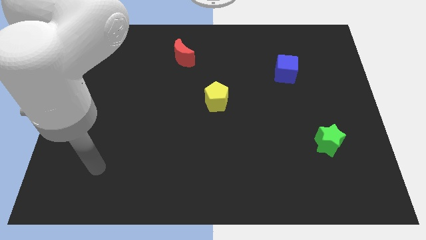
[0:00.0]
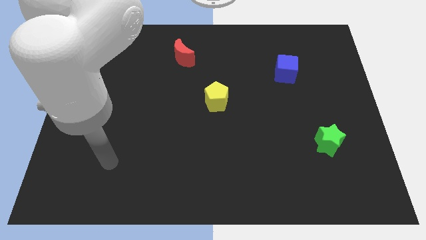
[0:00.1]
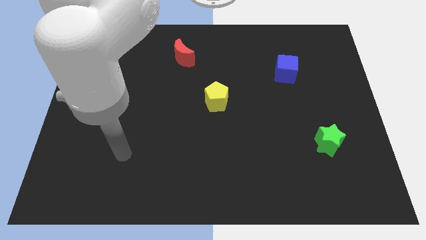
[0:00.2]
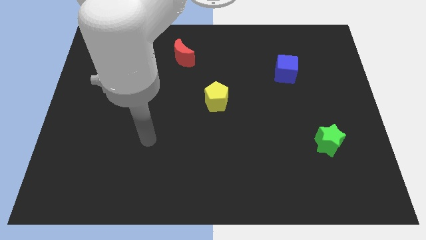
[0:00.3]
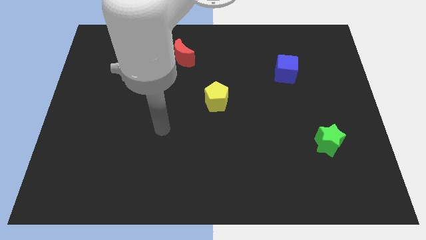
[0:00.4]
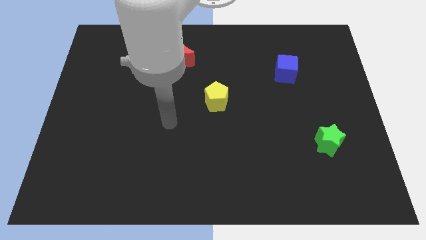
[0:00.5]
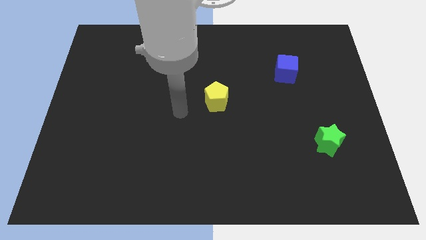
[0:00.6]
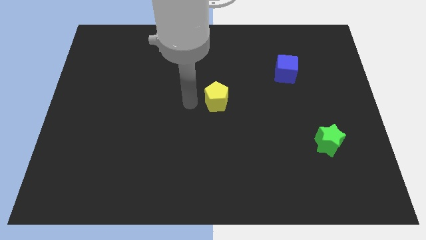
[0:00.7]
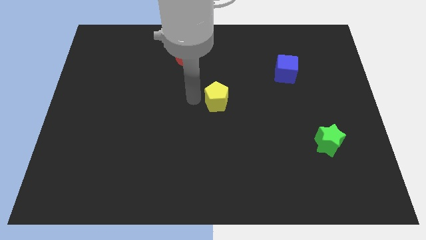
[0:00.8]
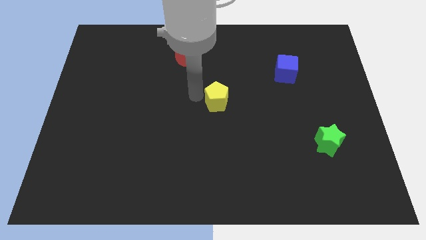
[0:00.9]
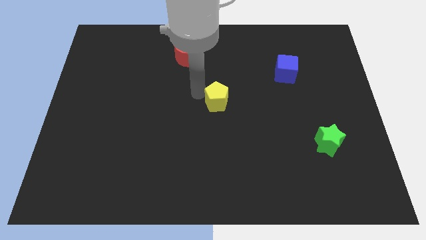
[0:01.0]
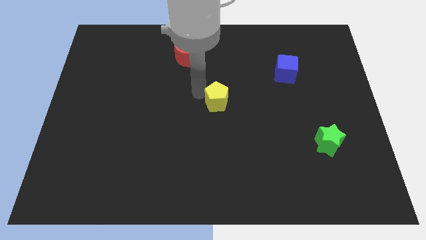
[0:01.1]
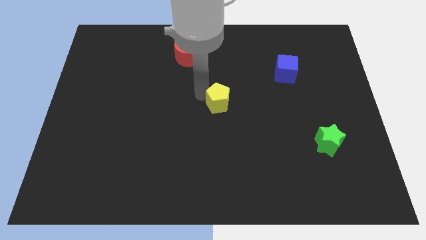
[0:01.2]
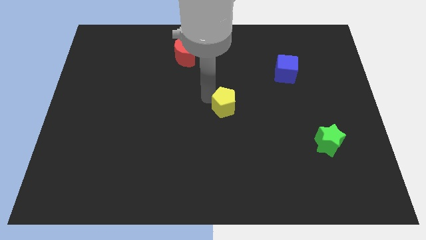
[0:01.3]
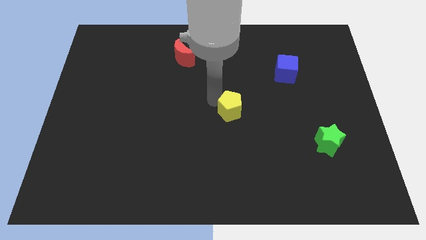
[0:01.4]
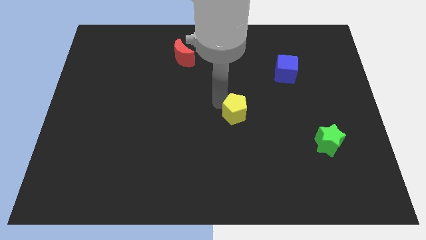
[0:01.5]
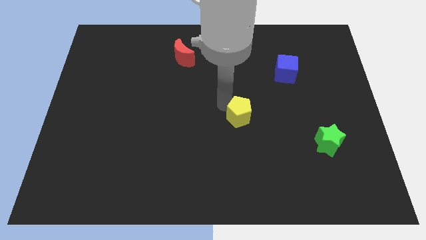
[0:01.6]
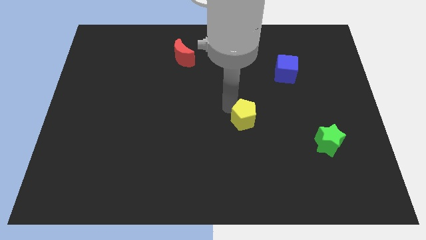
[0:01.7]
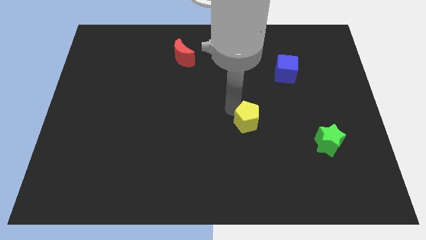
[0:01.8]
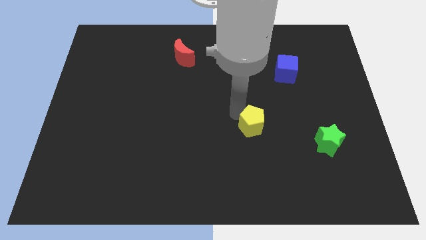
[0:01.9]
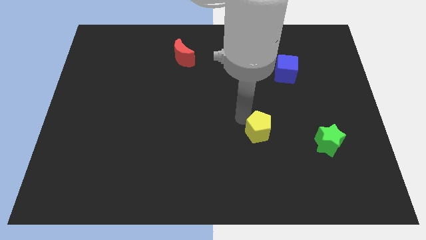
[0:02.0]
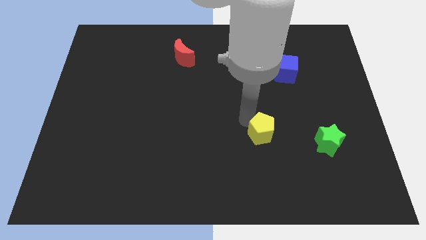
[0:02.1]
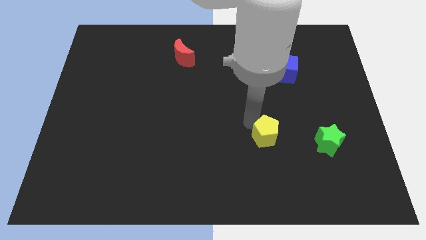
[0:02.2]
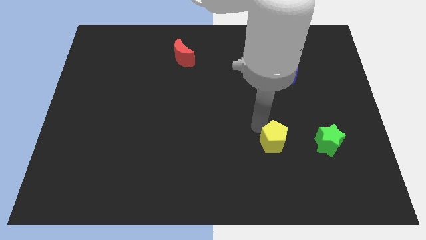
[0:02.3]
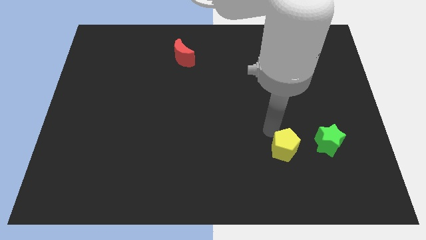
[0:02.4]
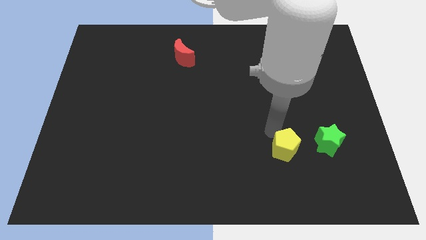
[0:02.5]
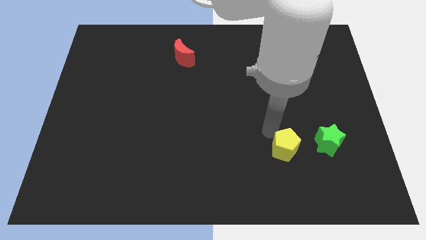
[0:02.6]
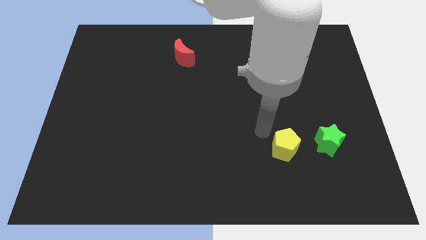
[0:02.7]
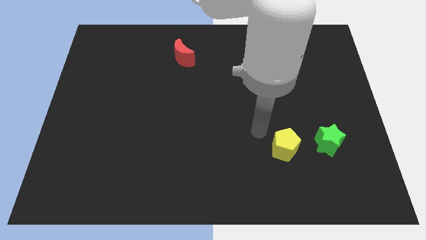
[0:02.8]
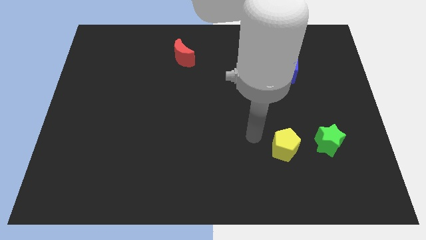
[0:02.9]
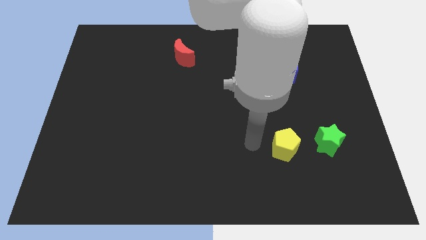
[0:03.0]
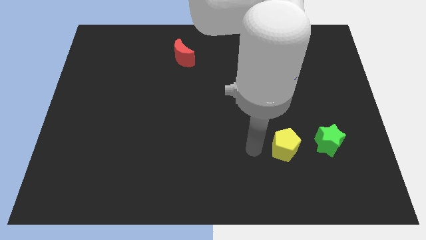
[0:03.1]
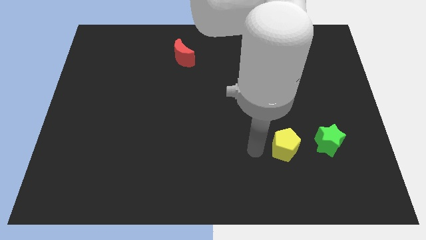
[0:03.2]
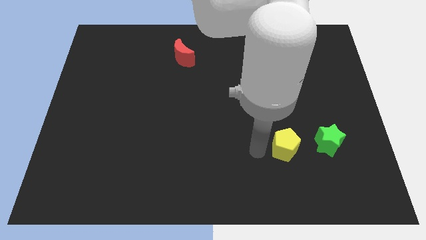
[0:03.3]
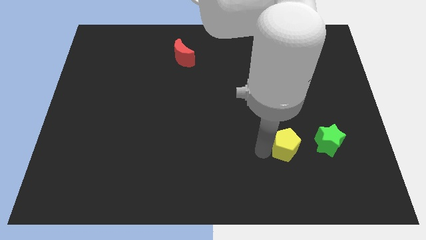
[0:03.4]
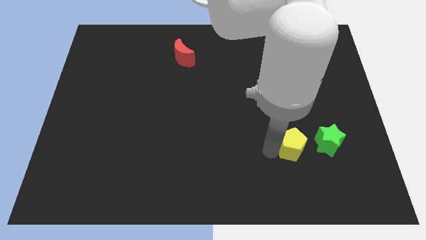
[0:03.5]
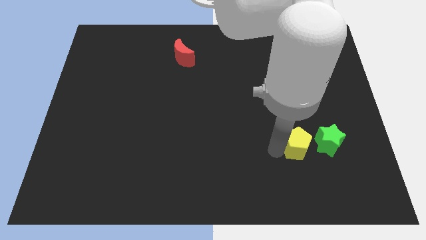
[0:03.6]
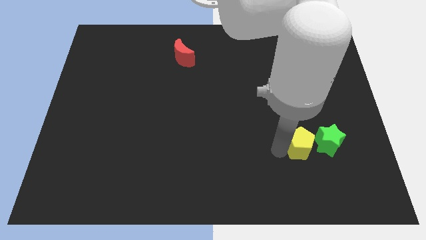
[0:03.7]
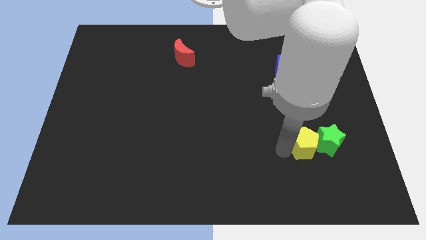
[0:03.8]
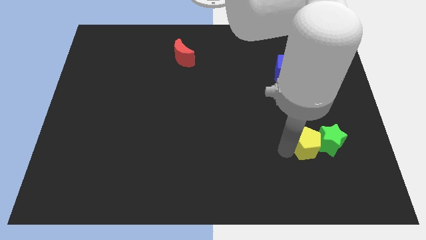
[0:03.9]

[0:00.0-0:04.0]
put the pentagon next to the green block

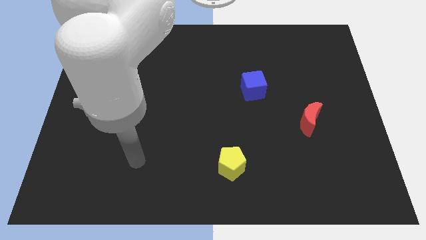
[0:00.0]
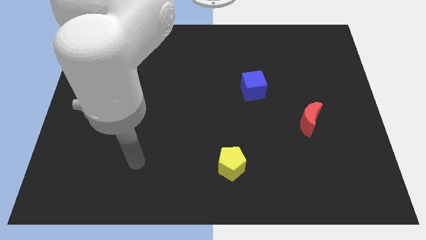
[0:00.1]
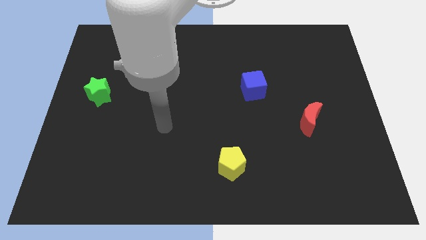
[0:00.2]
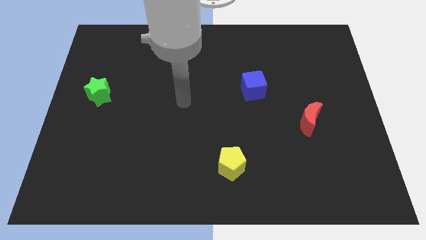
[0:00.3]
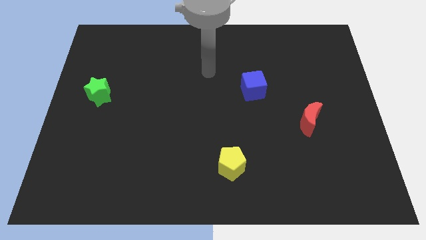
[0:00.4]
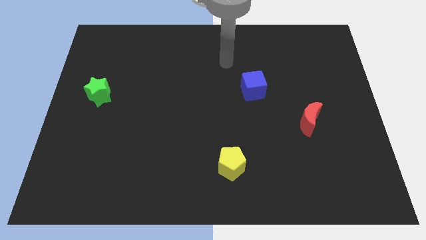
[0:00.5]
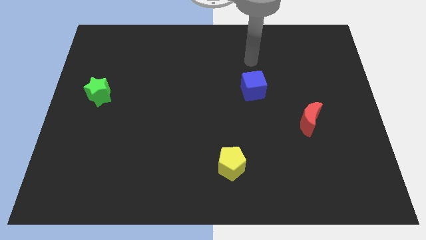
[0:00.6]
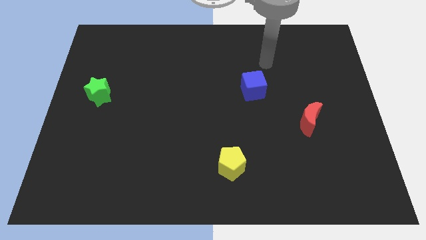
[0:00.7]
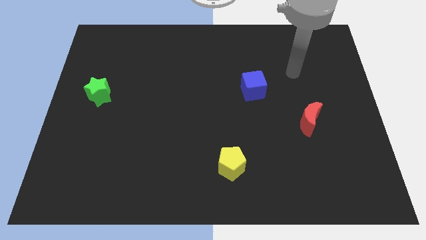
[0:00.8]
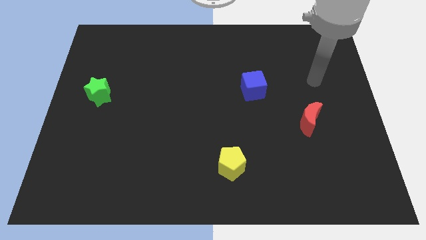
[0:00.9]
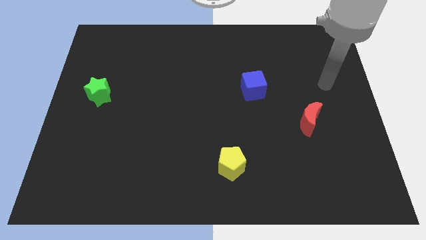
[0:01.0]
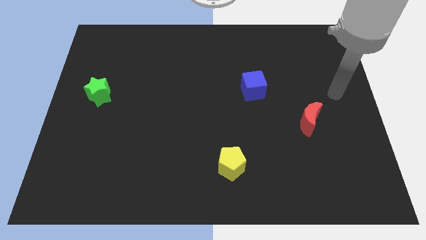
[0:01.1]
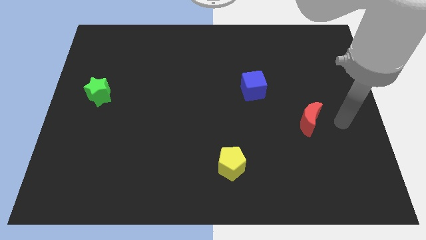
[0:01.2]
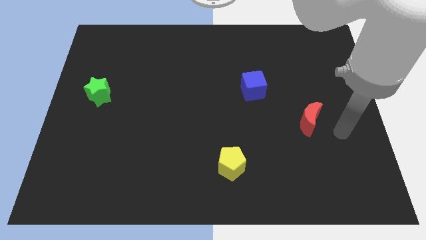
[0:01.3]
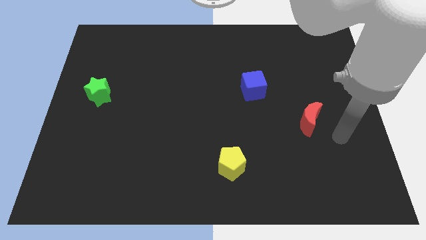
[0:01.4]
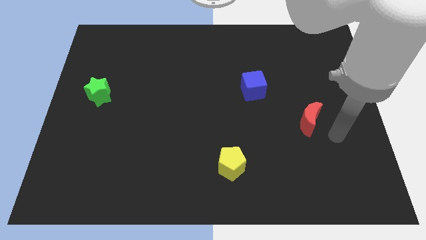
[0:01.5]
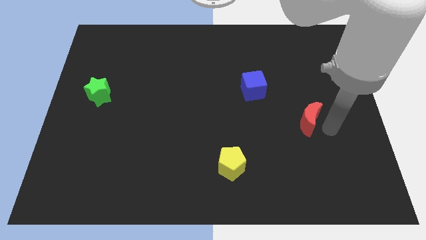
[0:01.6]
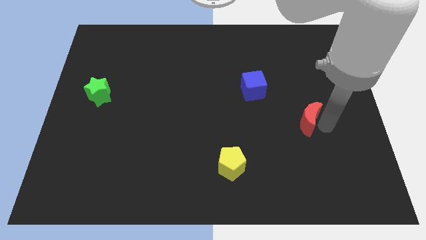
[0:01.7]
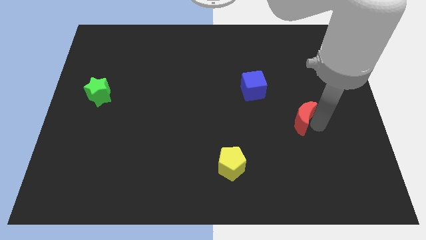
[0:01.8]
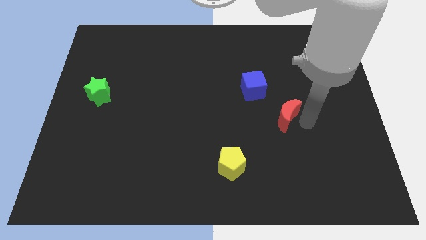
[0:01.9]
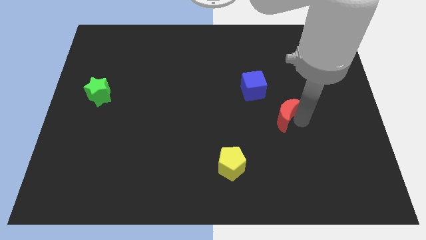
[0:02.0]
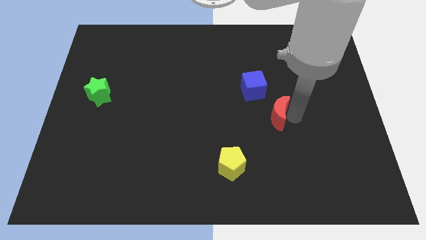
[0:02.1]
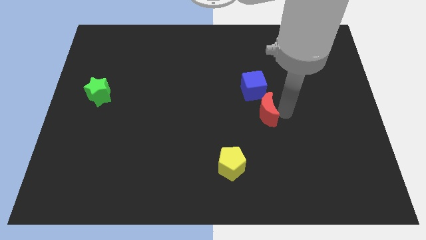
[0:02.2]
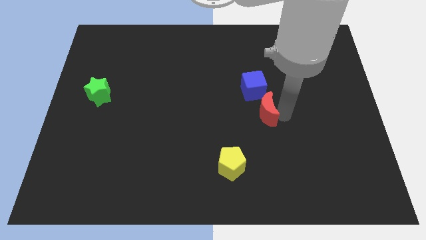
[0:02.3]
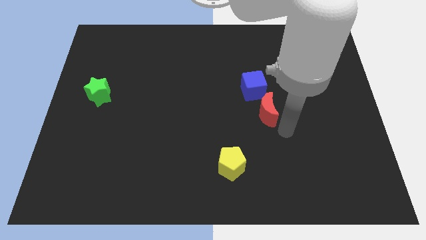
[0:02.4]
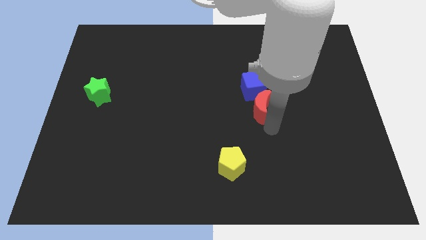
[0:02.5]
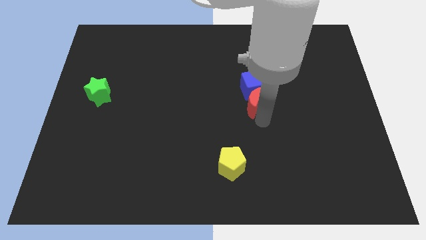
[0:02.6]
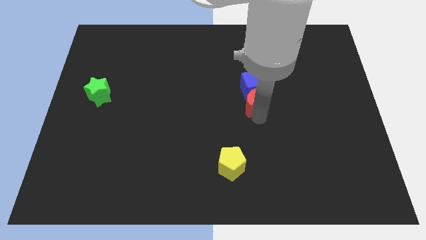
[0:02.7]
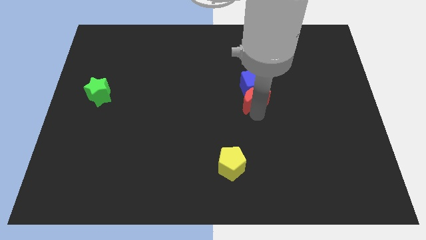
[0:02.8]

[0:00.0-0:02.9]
slide the red block towards the blue cube

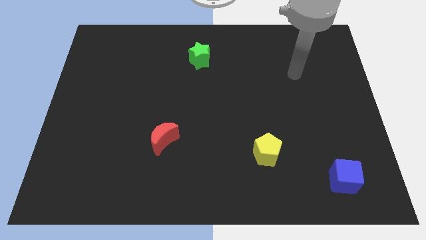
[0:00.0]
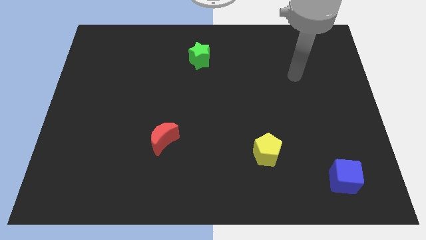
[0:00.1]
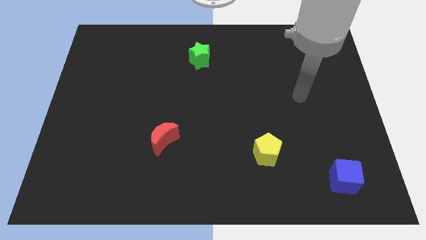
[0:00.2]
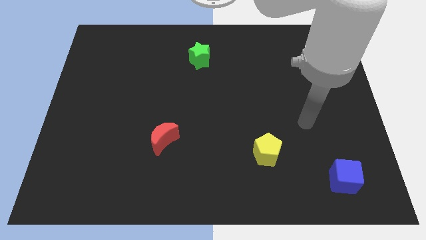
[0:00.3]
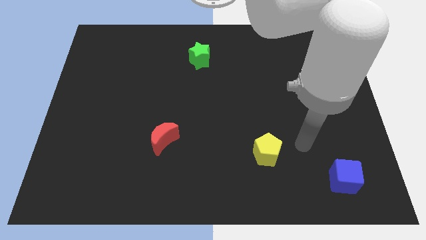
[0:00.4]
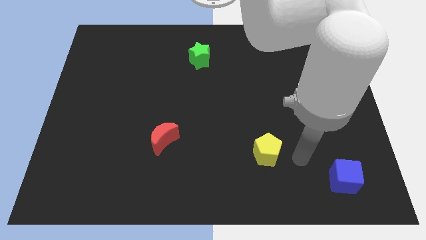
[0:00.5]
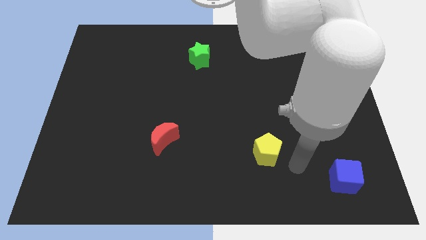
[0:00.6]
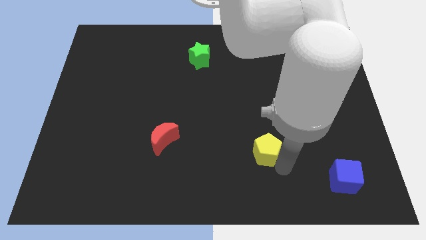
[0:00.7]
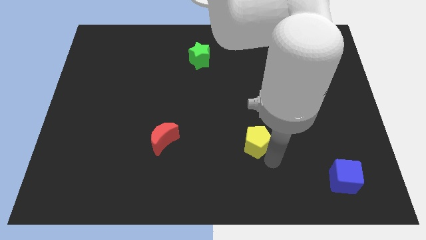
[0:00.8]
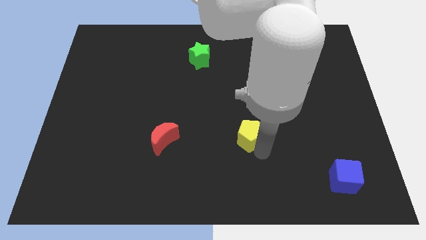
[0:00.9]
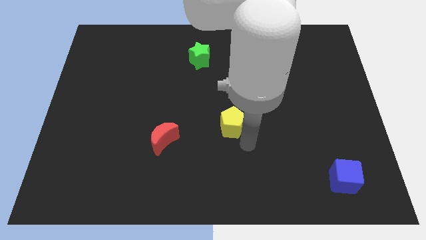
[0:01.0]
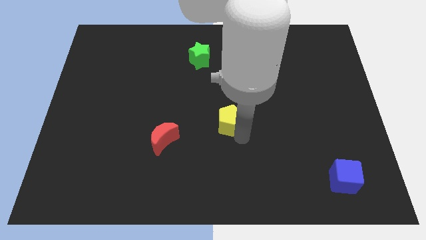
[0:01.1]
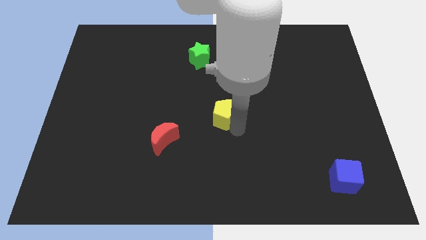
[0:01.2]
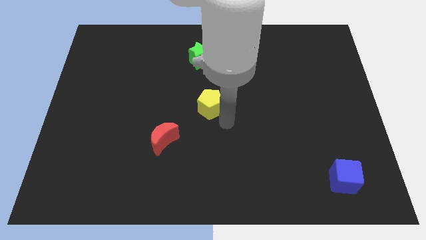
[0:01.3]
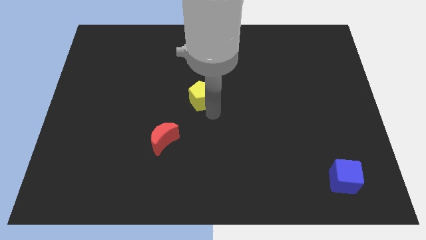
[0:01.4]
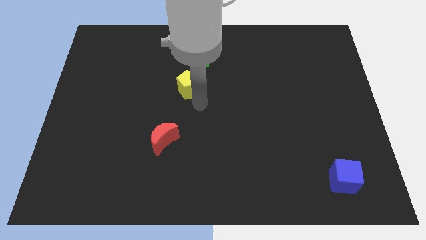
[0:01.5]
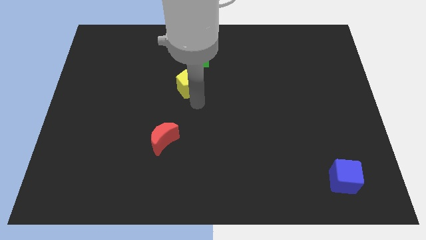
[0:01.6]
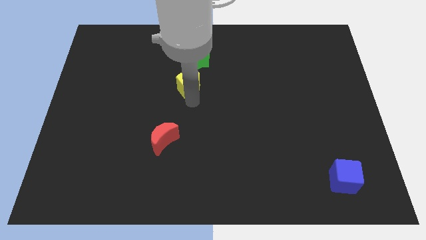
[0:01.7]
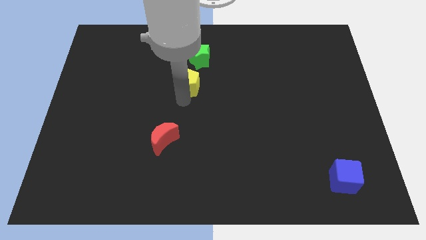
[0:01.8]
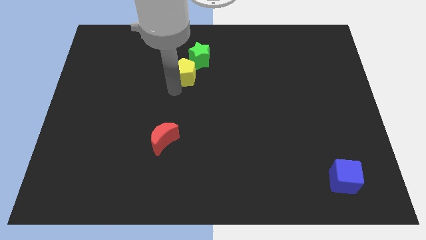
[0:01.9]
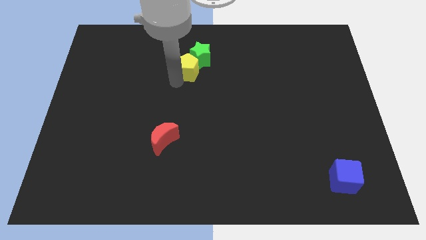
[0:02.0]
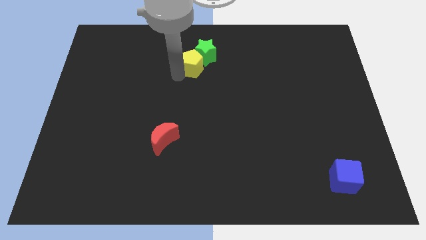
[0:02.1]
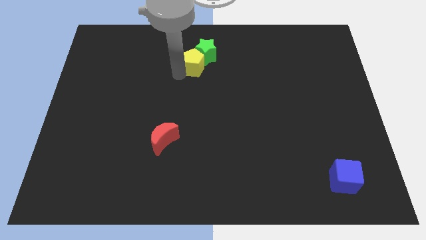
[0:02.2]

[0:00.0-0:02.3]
put the pentagon towards the green block
